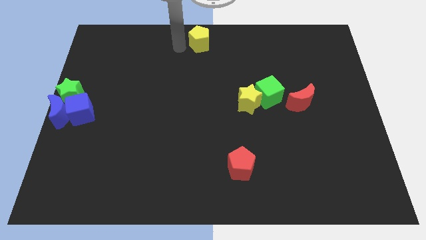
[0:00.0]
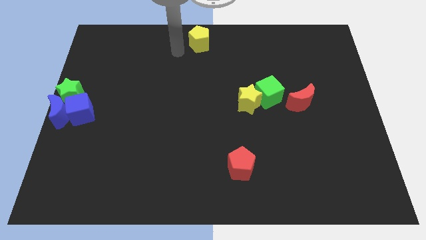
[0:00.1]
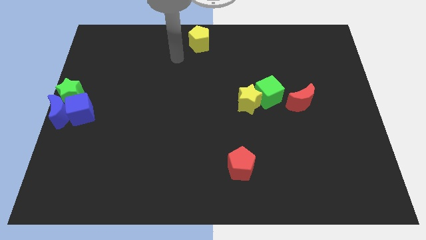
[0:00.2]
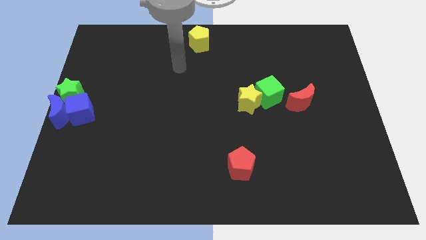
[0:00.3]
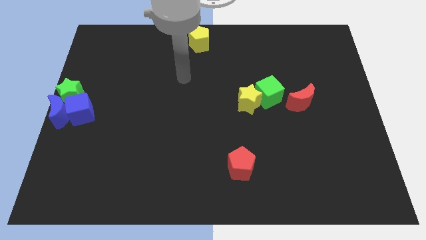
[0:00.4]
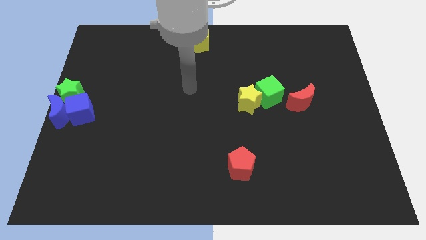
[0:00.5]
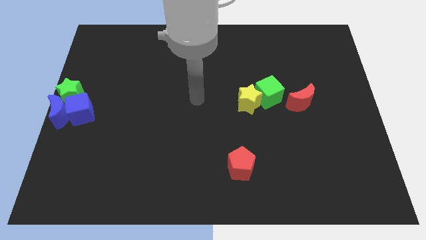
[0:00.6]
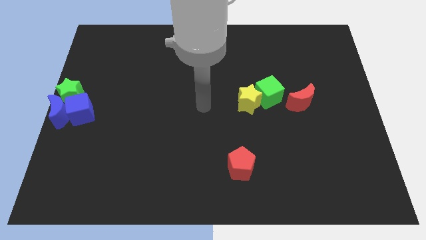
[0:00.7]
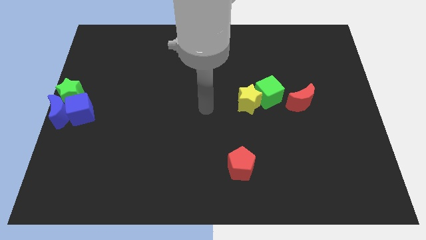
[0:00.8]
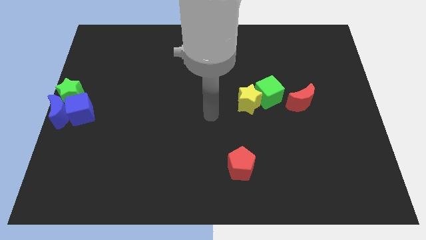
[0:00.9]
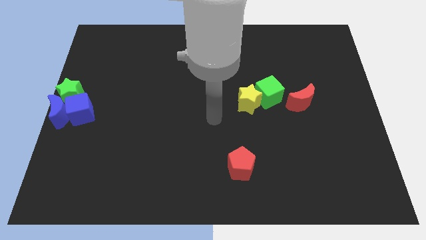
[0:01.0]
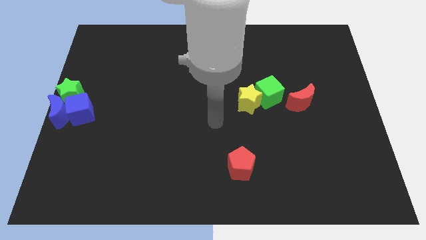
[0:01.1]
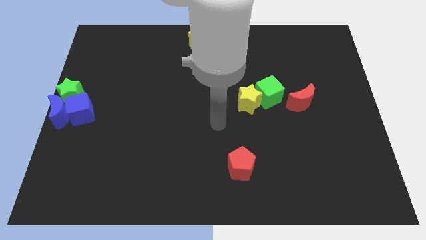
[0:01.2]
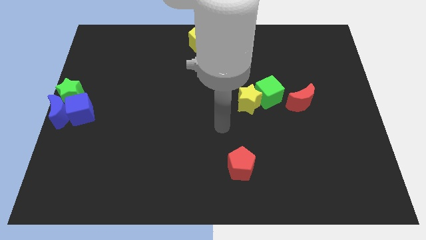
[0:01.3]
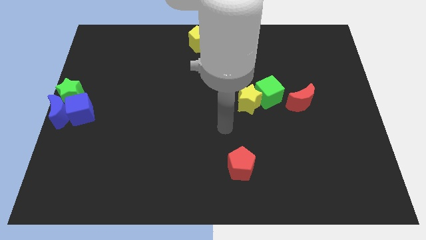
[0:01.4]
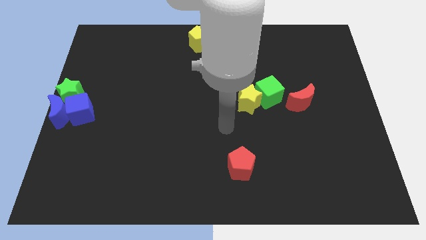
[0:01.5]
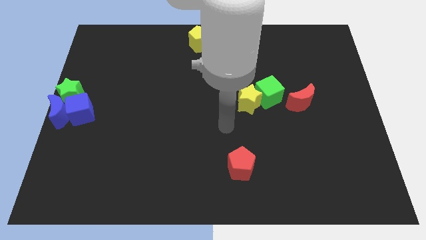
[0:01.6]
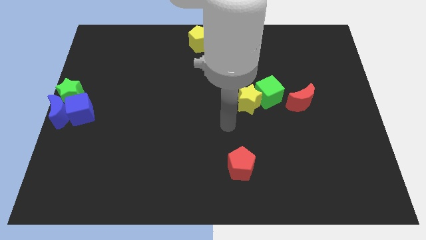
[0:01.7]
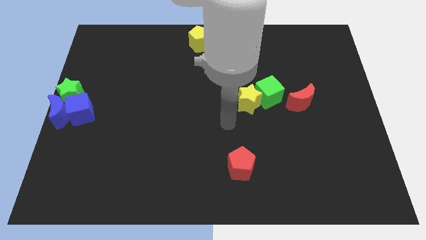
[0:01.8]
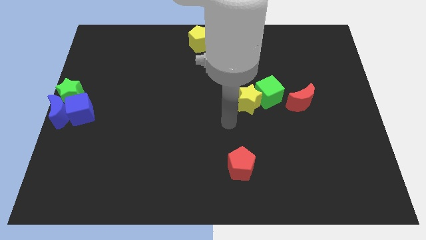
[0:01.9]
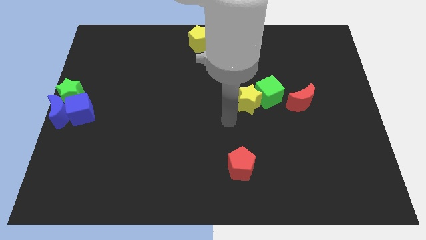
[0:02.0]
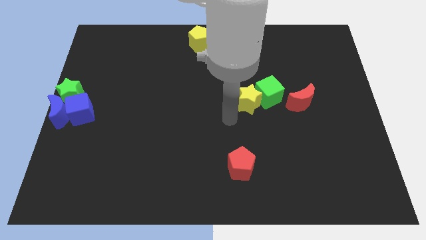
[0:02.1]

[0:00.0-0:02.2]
move the arm away from the yellow pentagon

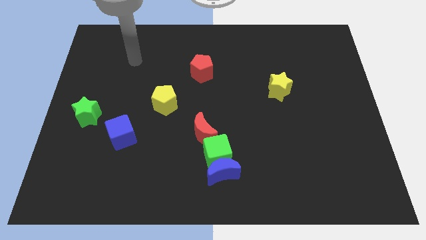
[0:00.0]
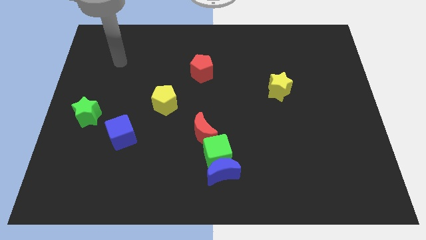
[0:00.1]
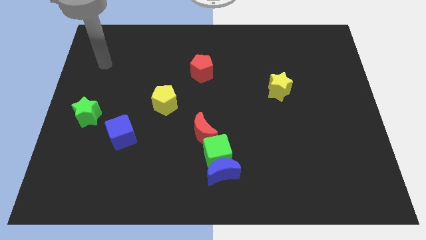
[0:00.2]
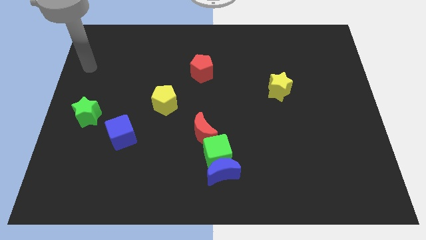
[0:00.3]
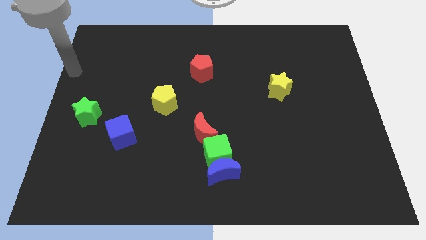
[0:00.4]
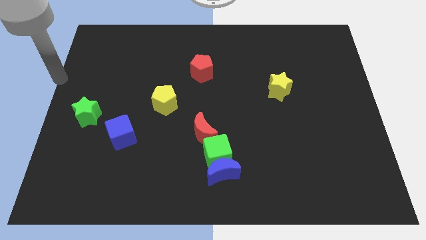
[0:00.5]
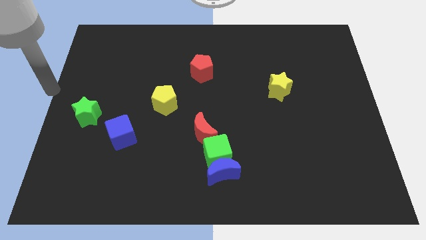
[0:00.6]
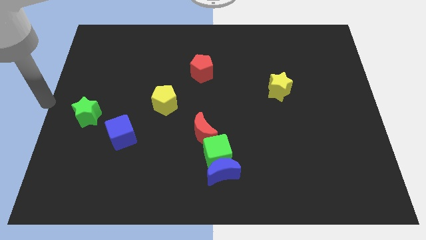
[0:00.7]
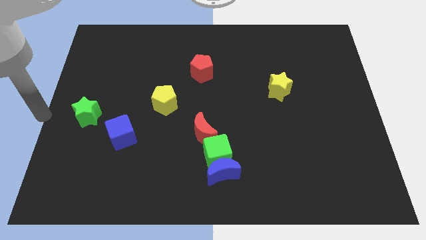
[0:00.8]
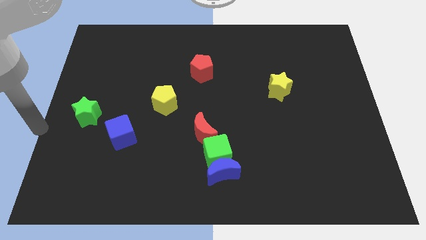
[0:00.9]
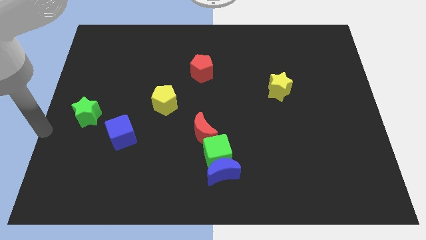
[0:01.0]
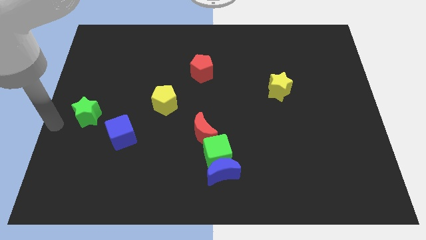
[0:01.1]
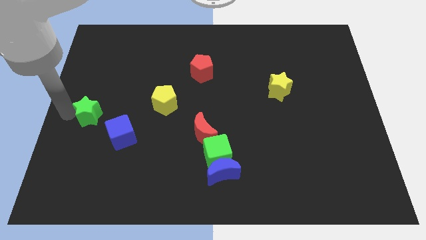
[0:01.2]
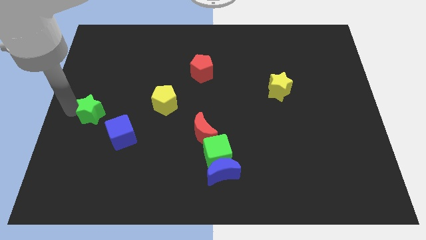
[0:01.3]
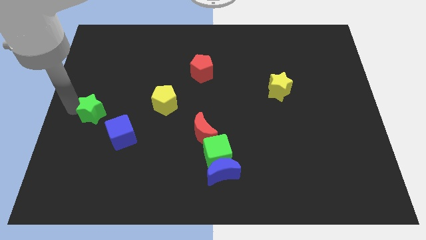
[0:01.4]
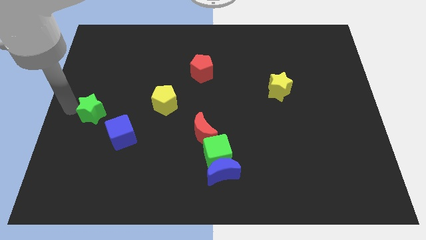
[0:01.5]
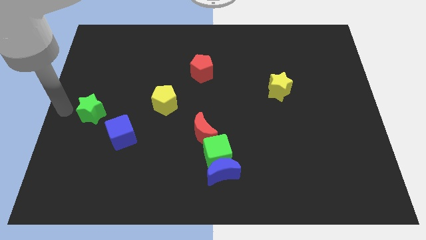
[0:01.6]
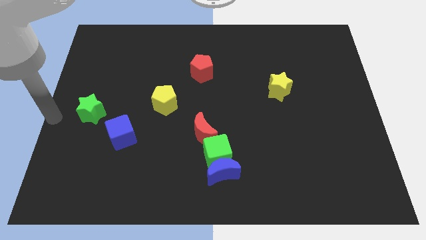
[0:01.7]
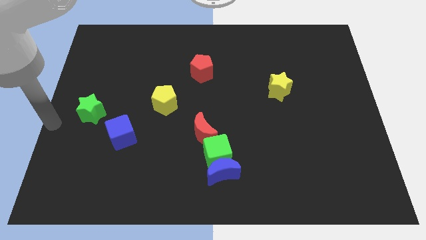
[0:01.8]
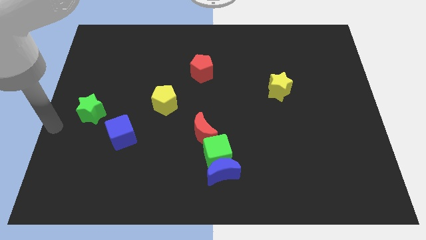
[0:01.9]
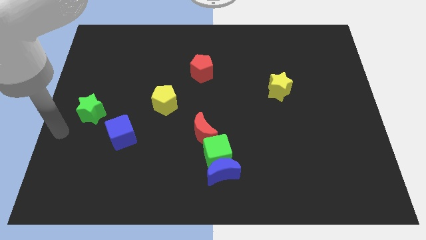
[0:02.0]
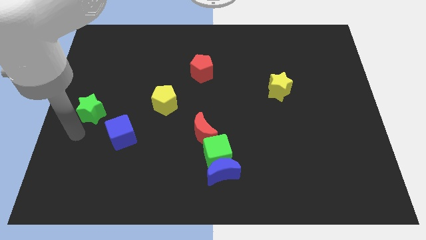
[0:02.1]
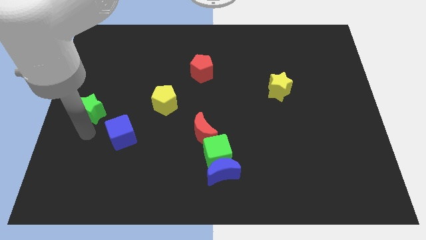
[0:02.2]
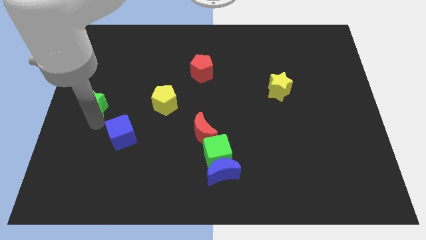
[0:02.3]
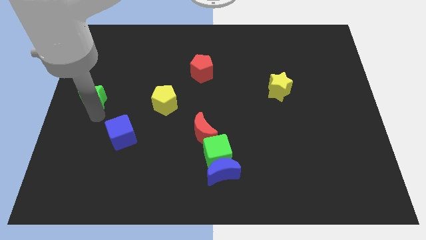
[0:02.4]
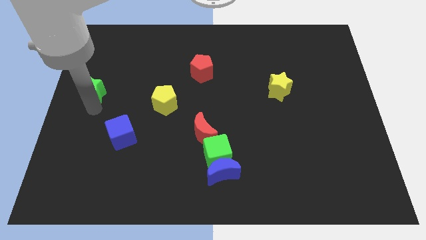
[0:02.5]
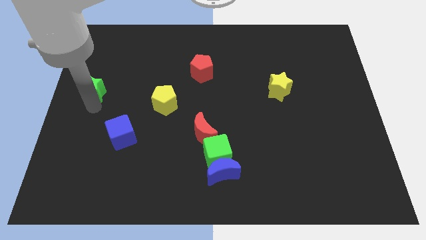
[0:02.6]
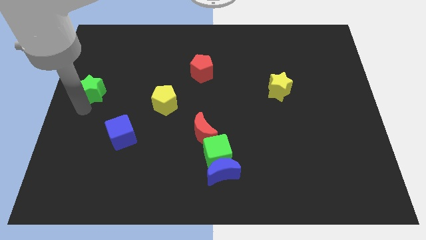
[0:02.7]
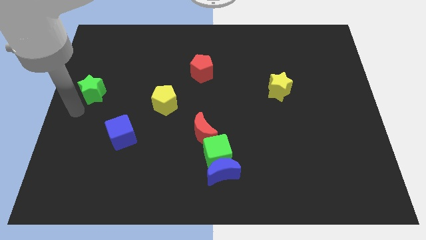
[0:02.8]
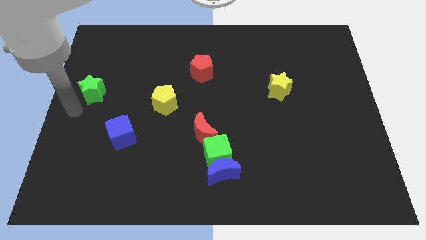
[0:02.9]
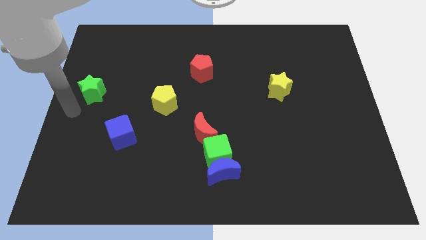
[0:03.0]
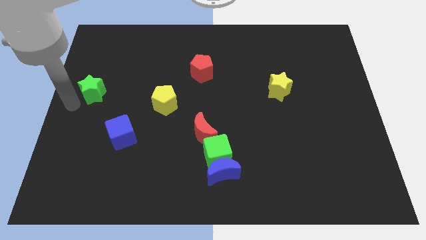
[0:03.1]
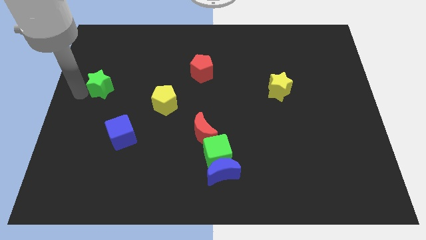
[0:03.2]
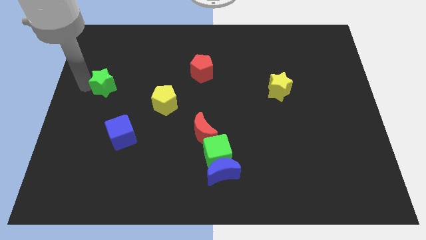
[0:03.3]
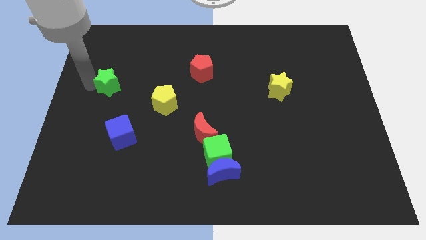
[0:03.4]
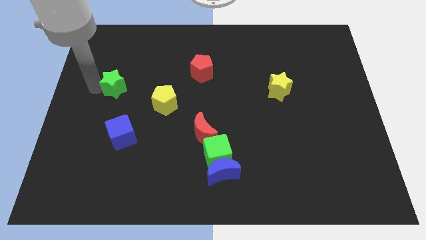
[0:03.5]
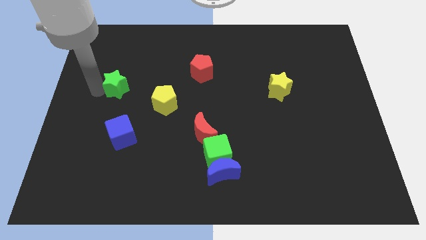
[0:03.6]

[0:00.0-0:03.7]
place the green star above blue cube

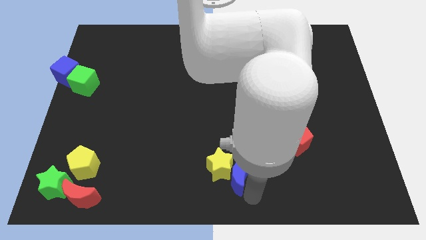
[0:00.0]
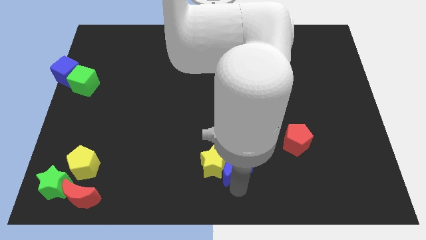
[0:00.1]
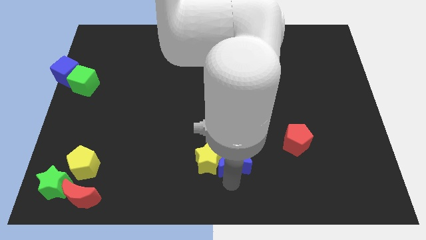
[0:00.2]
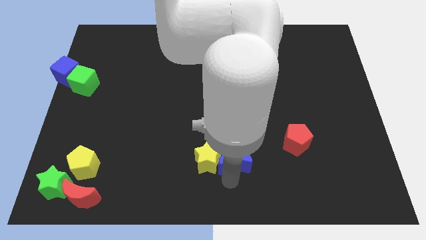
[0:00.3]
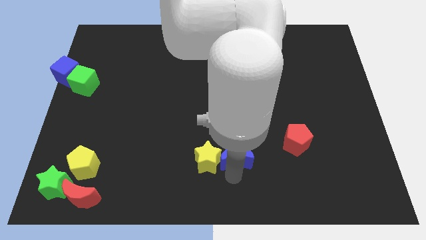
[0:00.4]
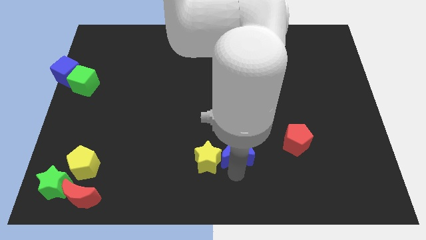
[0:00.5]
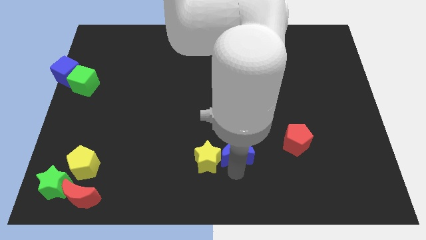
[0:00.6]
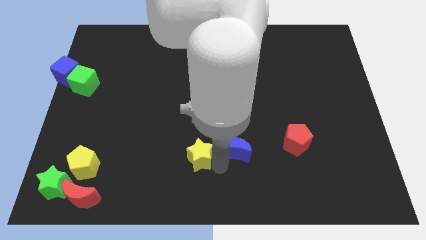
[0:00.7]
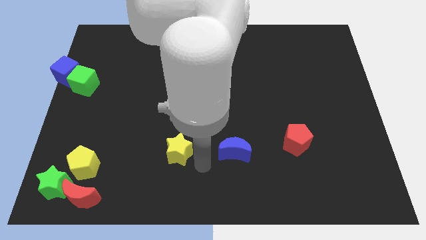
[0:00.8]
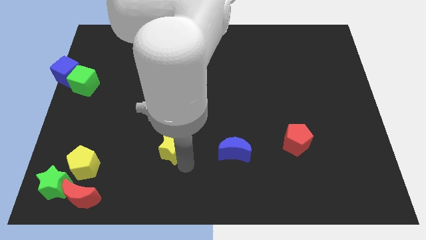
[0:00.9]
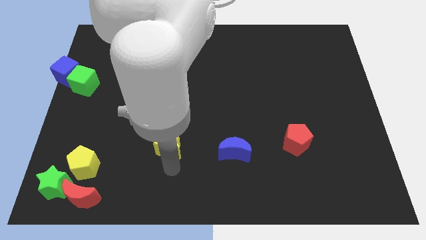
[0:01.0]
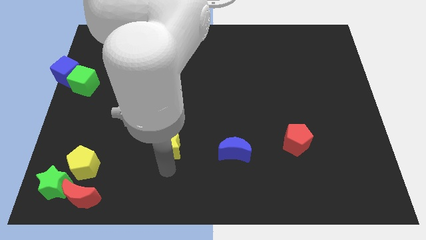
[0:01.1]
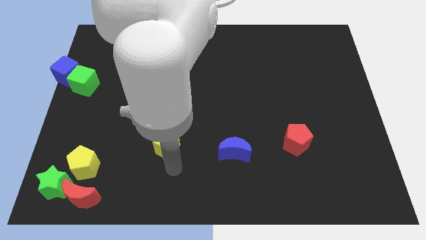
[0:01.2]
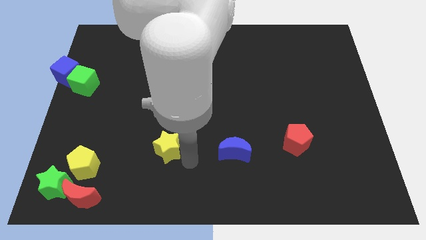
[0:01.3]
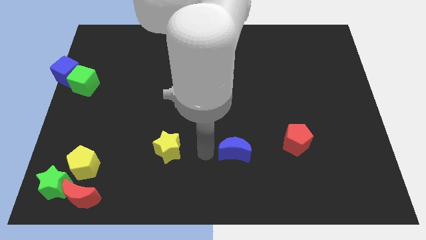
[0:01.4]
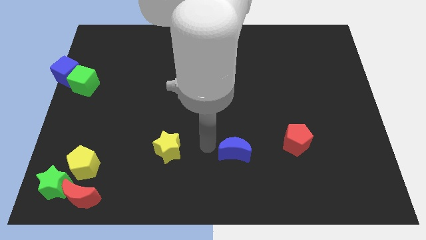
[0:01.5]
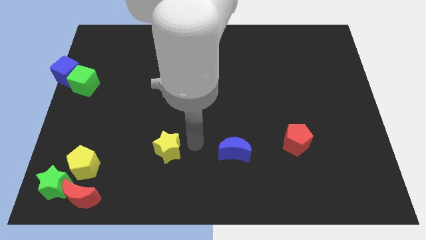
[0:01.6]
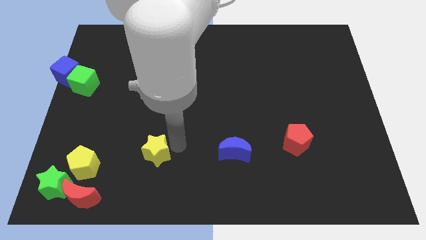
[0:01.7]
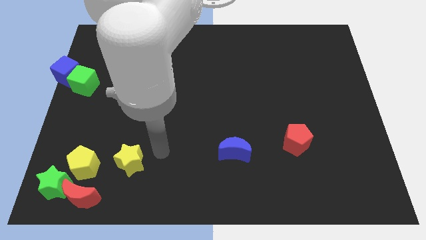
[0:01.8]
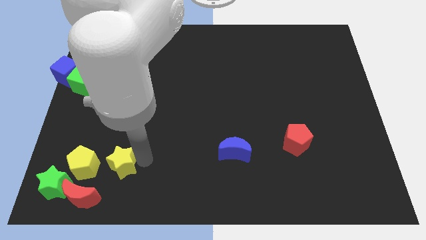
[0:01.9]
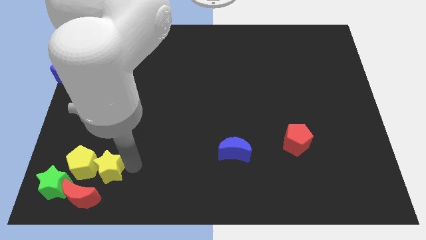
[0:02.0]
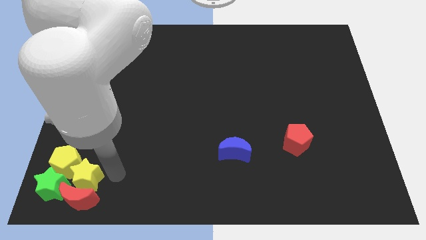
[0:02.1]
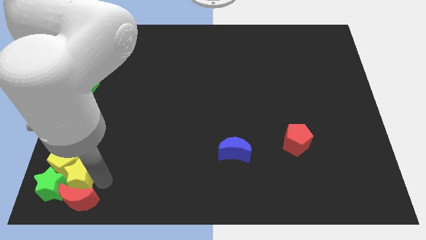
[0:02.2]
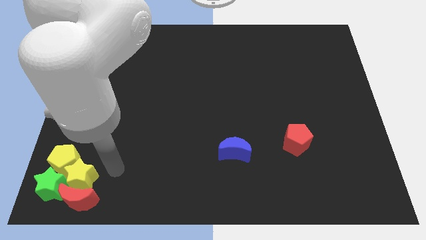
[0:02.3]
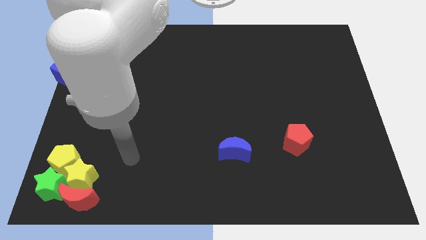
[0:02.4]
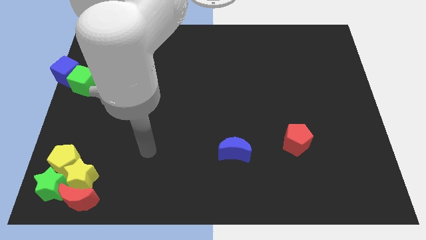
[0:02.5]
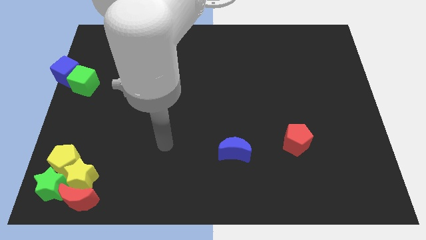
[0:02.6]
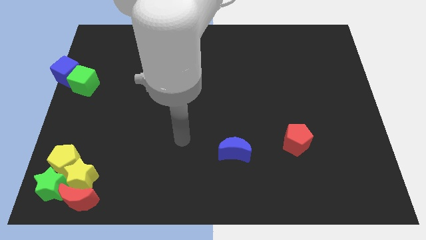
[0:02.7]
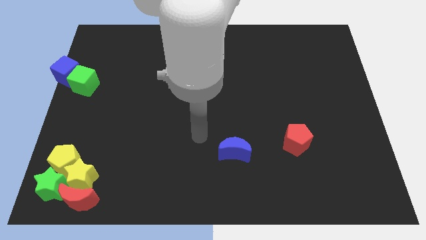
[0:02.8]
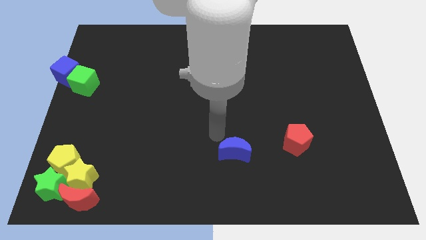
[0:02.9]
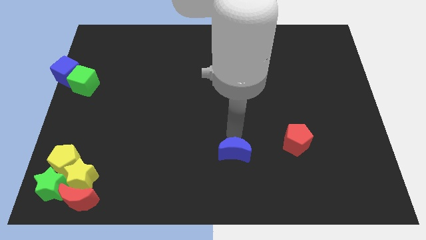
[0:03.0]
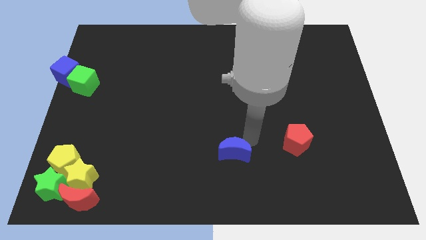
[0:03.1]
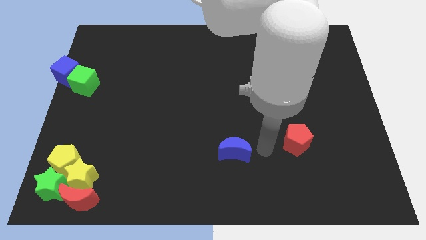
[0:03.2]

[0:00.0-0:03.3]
move the yellow star into the group of blocks
